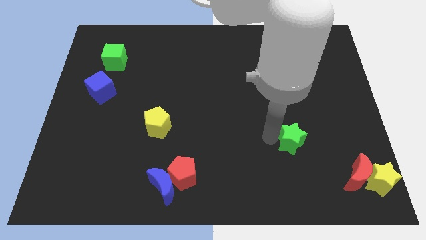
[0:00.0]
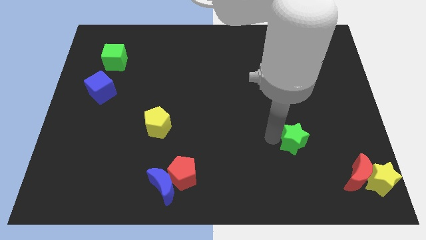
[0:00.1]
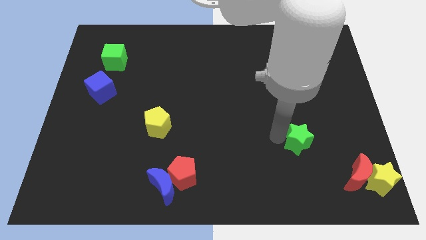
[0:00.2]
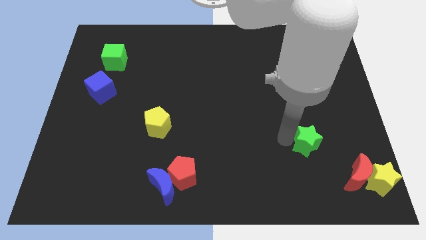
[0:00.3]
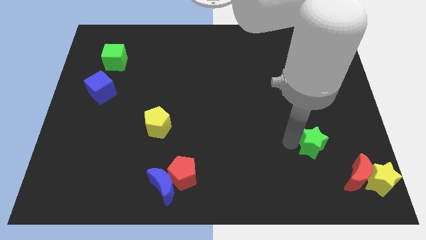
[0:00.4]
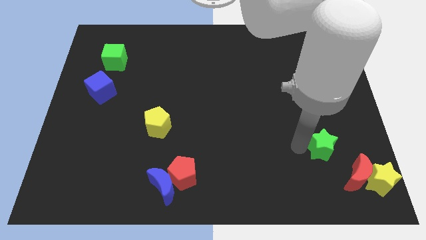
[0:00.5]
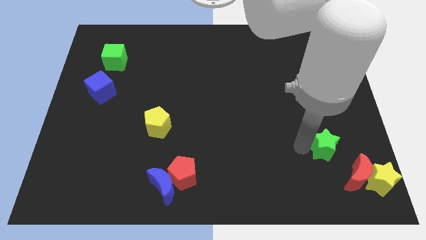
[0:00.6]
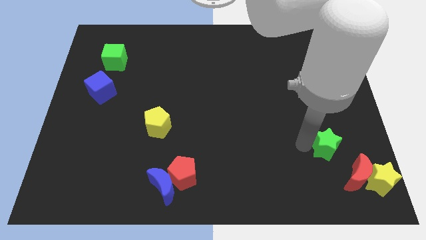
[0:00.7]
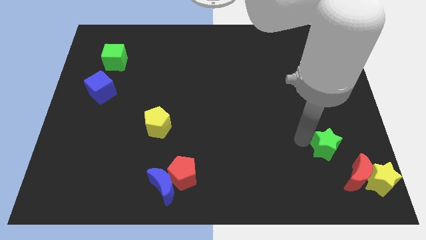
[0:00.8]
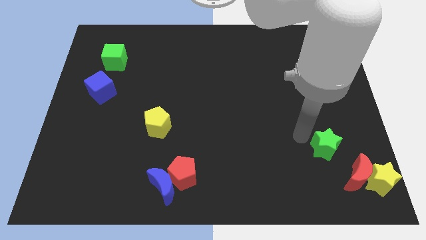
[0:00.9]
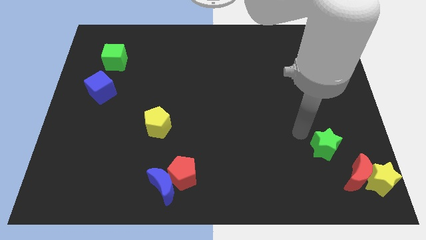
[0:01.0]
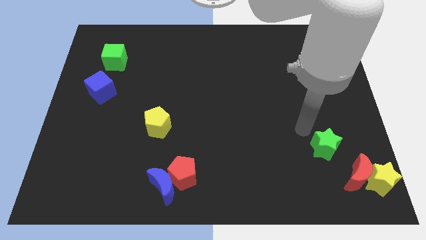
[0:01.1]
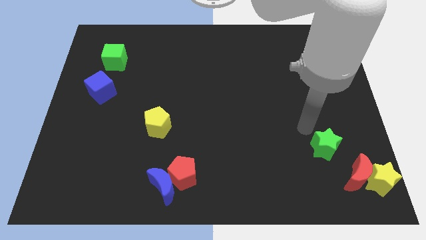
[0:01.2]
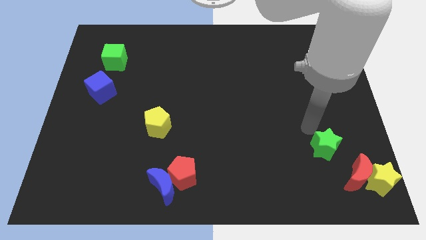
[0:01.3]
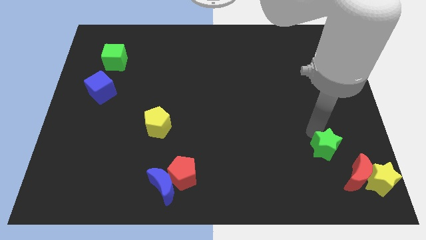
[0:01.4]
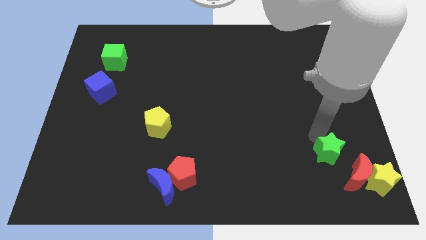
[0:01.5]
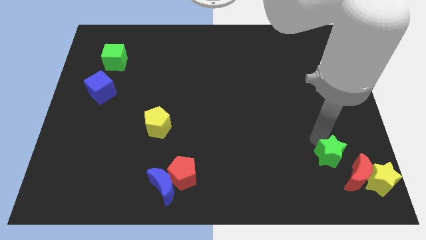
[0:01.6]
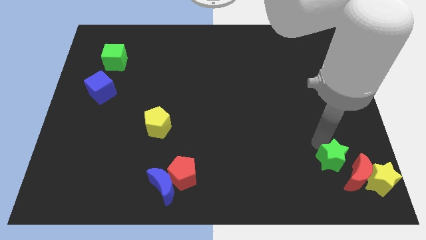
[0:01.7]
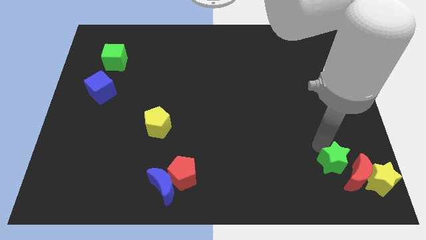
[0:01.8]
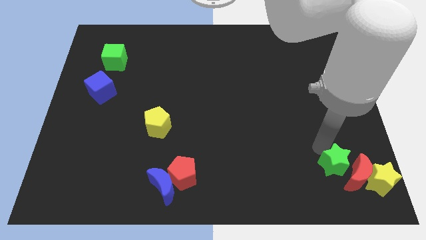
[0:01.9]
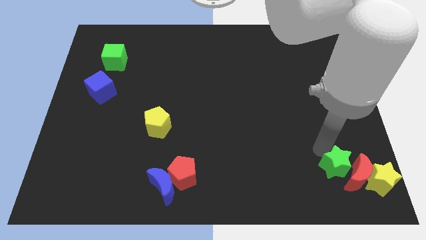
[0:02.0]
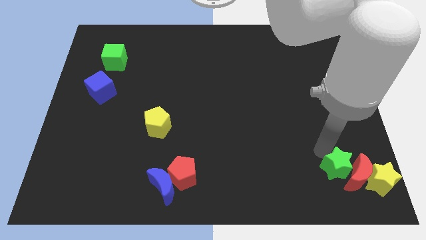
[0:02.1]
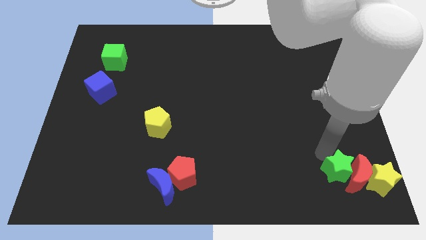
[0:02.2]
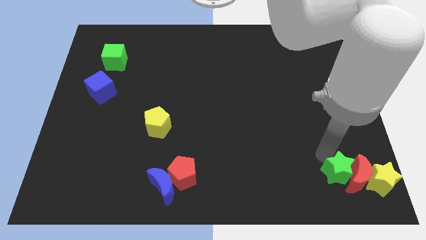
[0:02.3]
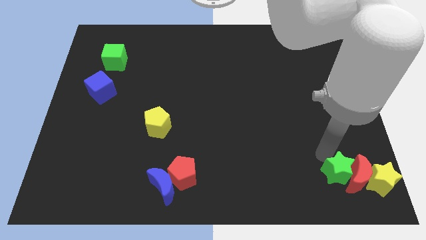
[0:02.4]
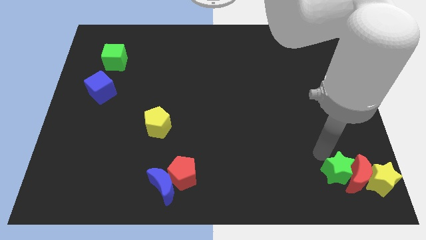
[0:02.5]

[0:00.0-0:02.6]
place green star near red crescent

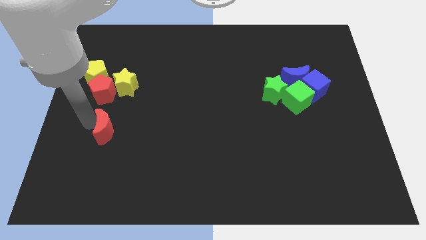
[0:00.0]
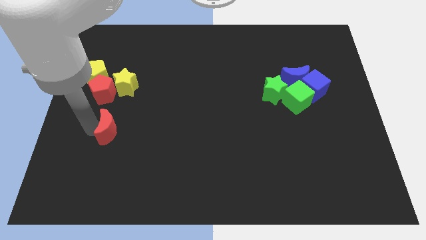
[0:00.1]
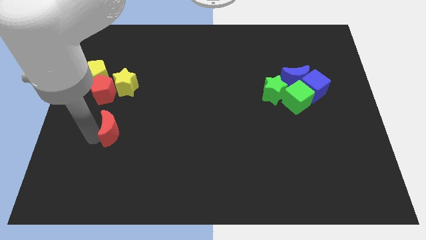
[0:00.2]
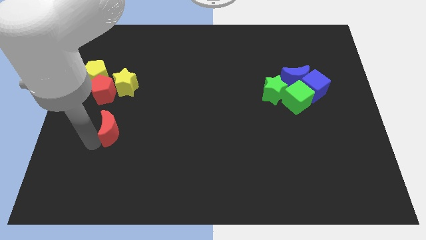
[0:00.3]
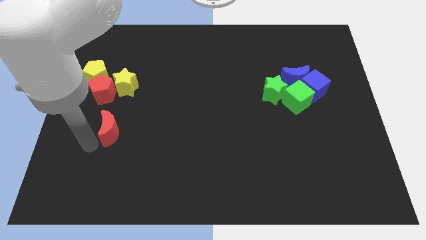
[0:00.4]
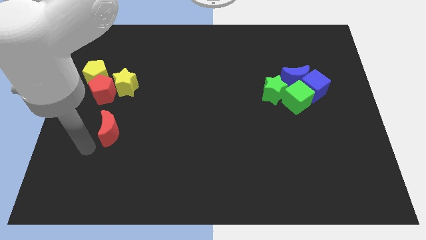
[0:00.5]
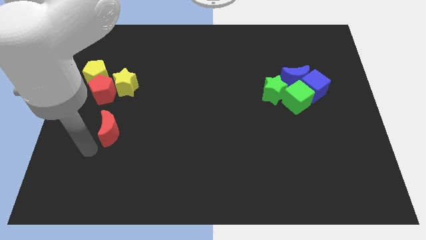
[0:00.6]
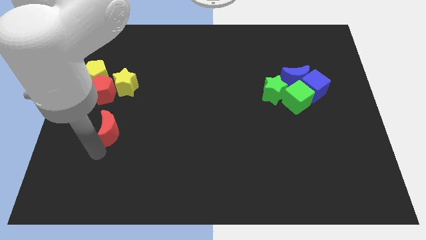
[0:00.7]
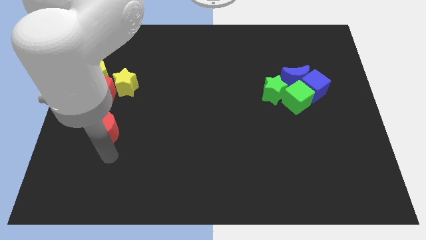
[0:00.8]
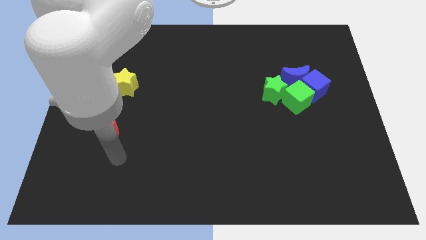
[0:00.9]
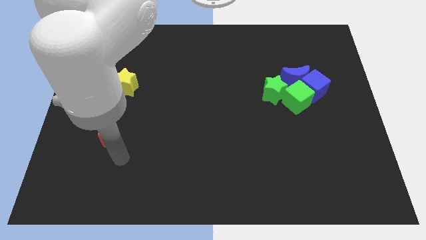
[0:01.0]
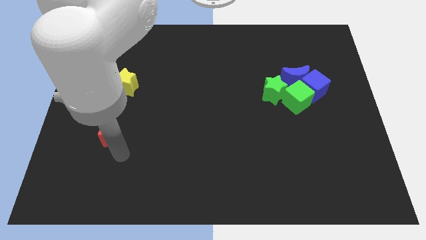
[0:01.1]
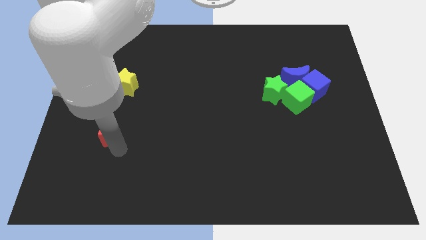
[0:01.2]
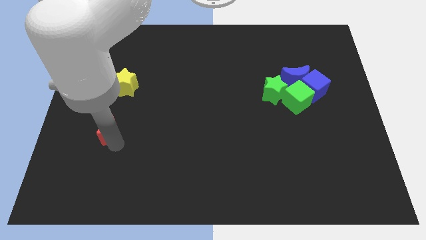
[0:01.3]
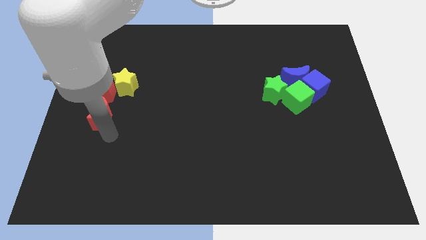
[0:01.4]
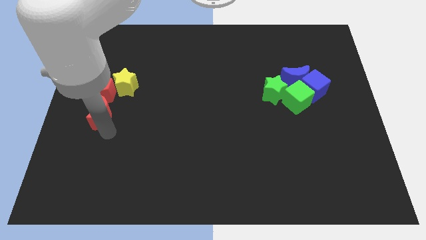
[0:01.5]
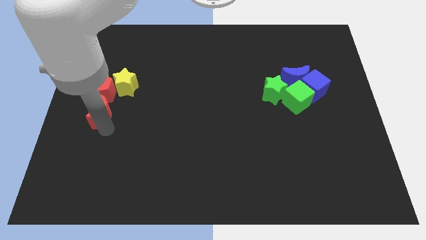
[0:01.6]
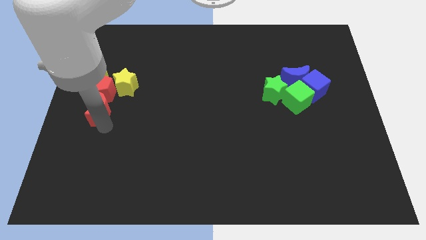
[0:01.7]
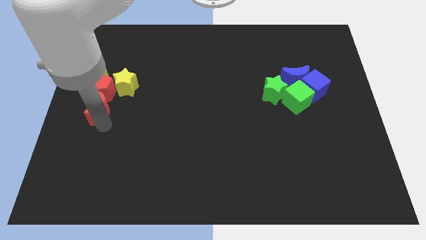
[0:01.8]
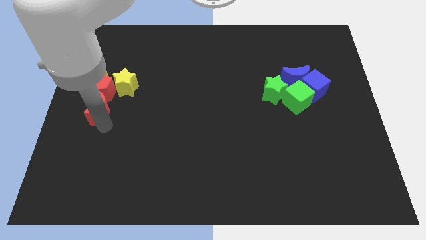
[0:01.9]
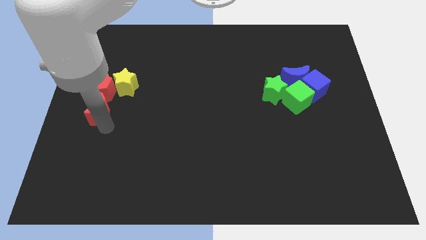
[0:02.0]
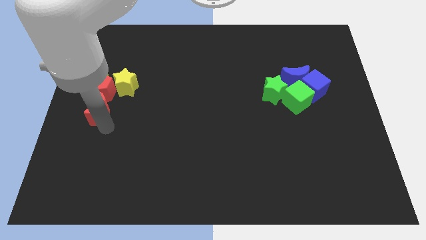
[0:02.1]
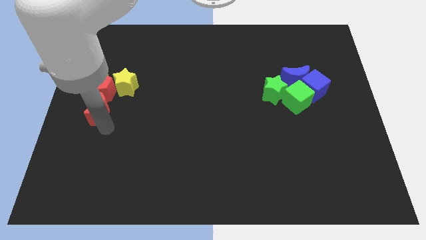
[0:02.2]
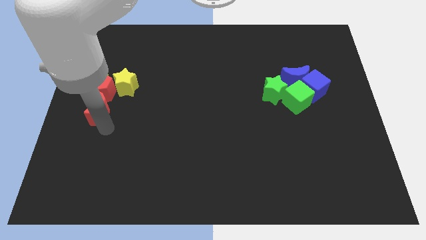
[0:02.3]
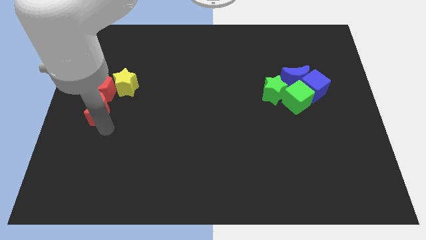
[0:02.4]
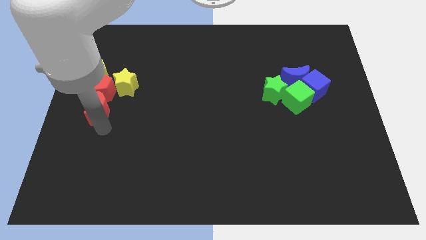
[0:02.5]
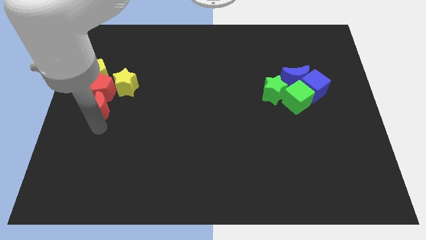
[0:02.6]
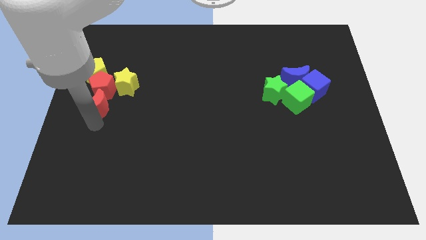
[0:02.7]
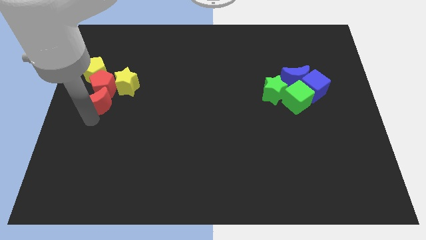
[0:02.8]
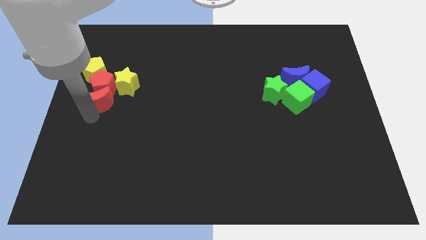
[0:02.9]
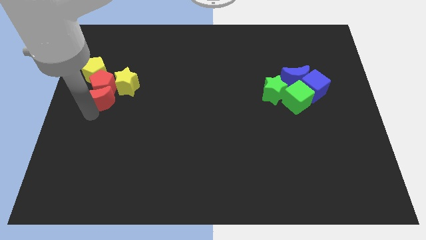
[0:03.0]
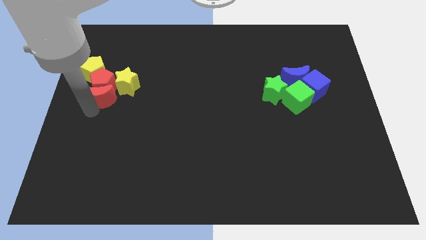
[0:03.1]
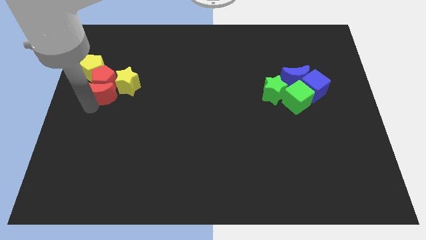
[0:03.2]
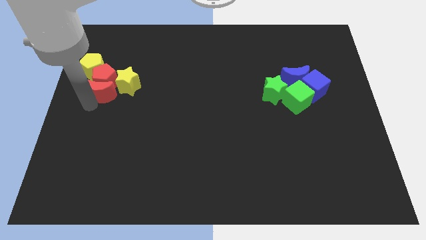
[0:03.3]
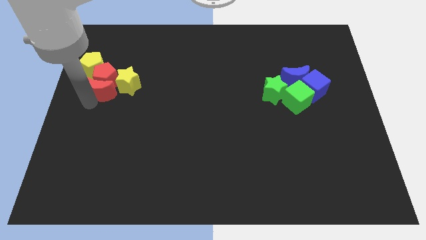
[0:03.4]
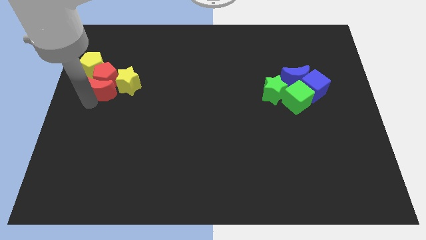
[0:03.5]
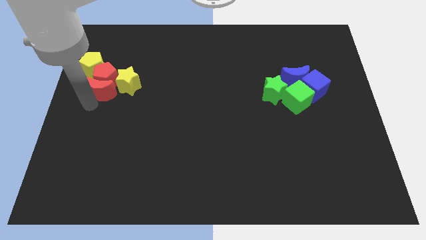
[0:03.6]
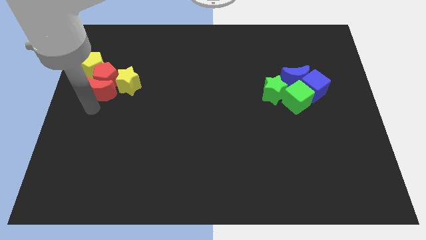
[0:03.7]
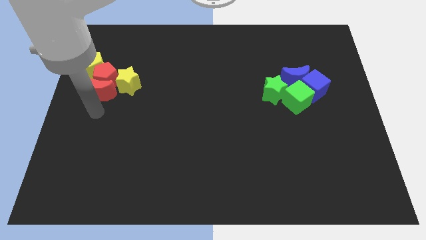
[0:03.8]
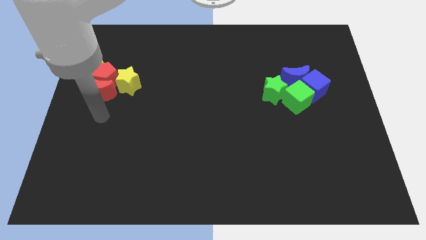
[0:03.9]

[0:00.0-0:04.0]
push red moon in to red pentagon

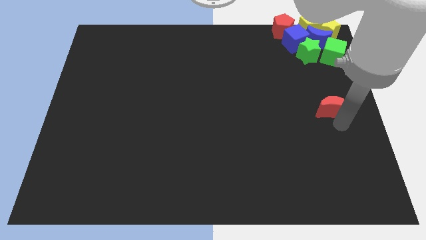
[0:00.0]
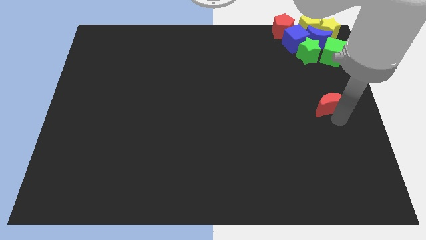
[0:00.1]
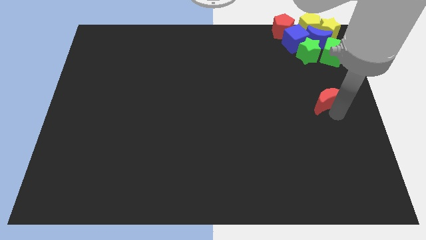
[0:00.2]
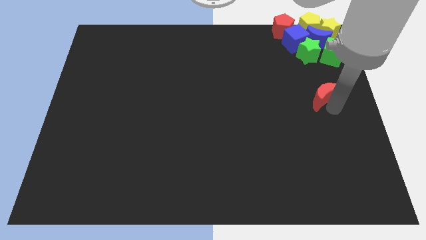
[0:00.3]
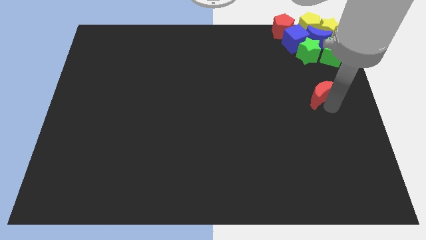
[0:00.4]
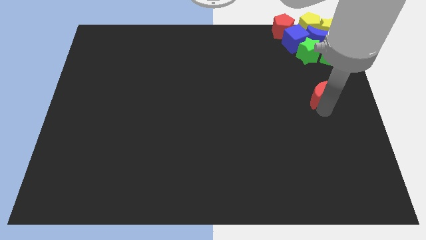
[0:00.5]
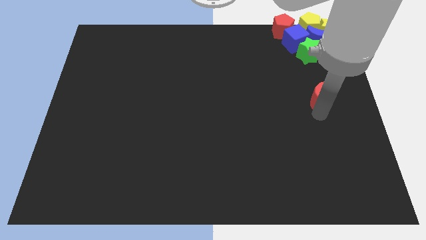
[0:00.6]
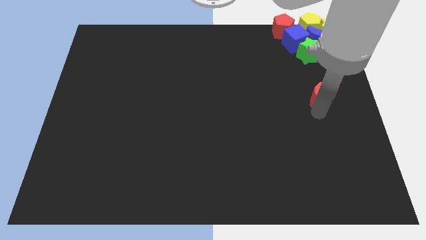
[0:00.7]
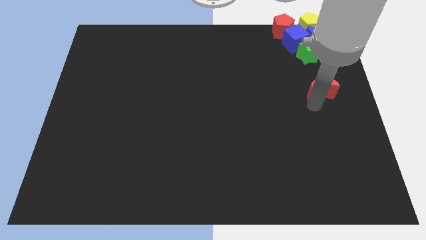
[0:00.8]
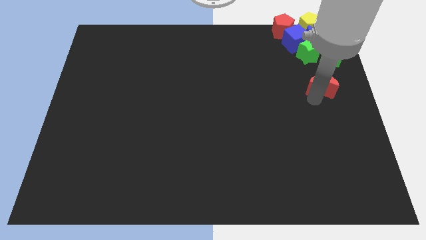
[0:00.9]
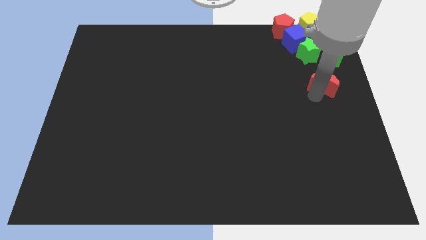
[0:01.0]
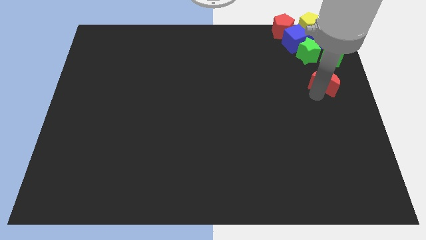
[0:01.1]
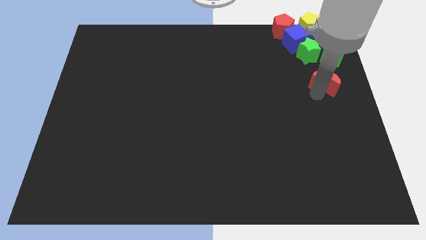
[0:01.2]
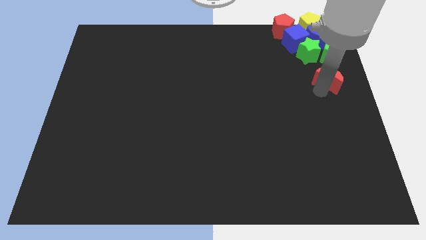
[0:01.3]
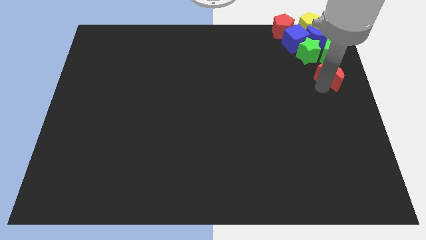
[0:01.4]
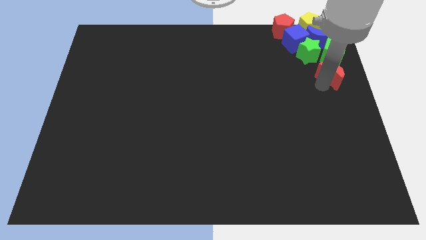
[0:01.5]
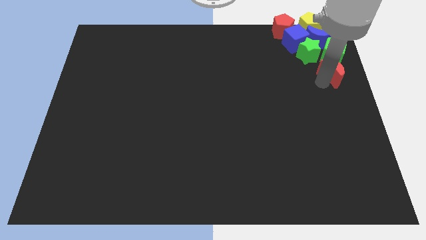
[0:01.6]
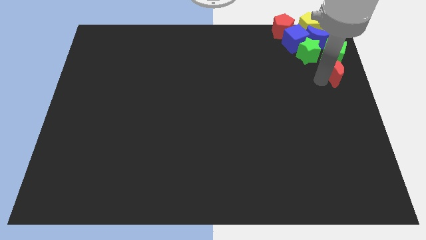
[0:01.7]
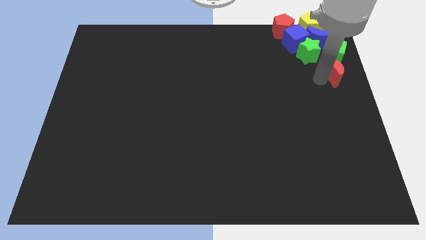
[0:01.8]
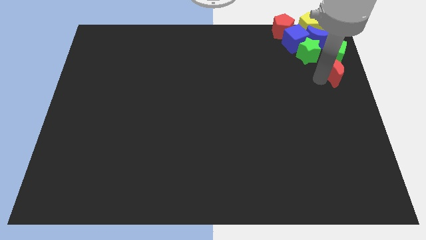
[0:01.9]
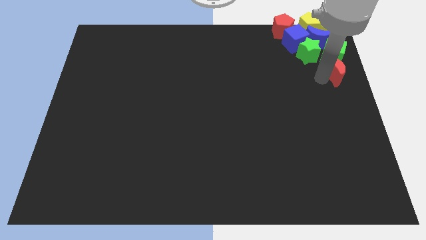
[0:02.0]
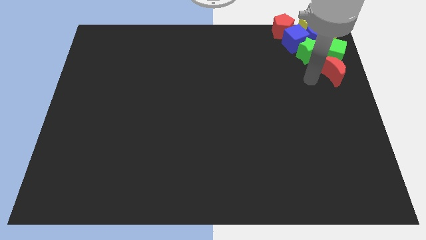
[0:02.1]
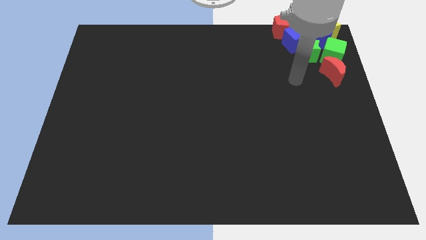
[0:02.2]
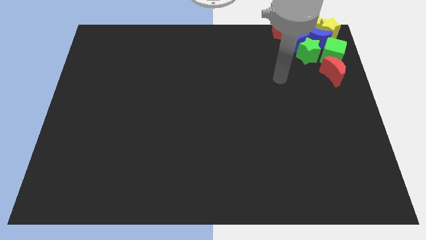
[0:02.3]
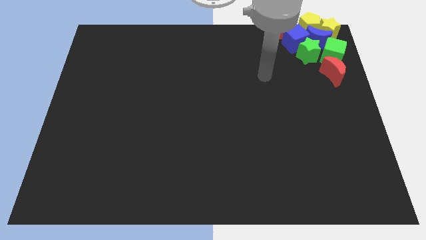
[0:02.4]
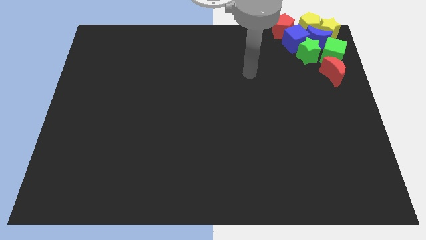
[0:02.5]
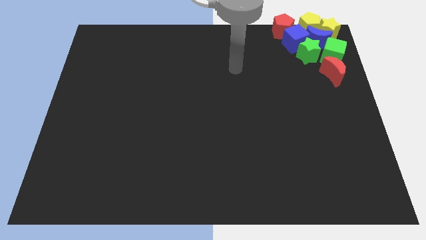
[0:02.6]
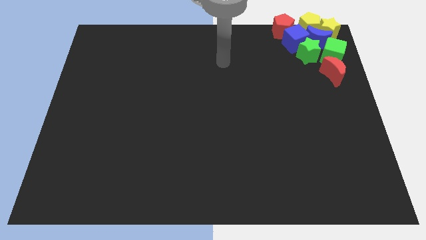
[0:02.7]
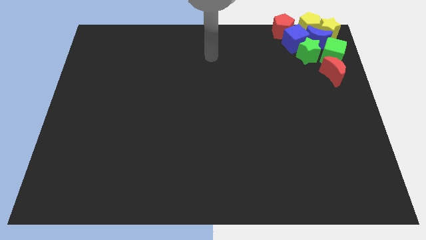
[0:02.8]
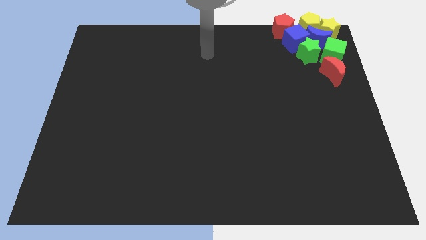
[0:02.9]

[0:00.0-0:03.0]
place red crescent below the green cube
